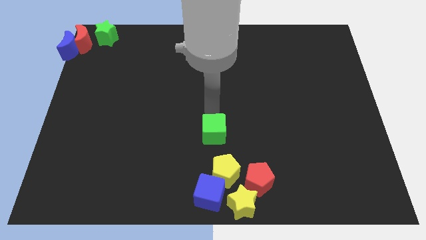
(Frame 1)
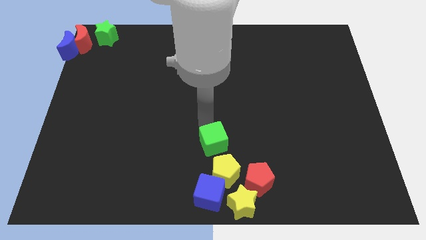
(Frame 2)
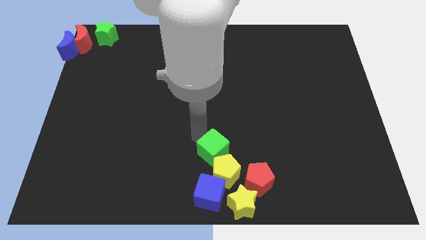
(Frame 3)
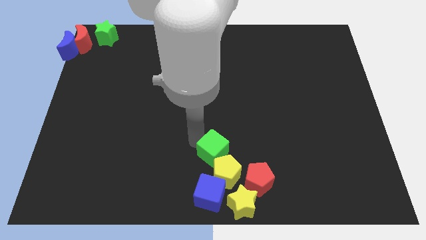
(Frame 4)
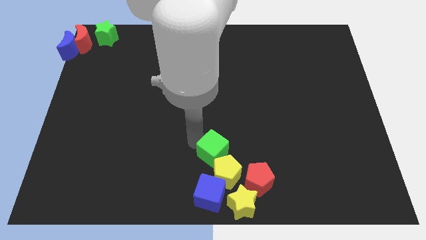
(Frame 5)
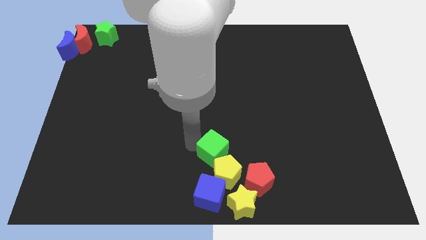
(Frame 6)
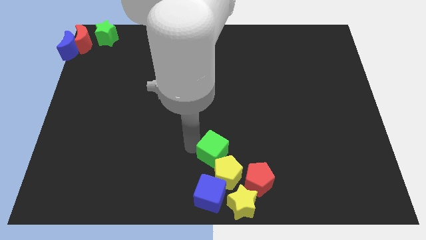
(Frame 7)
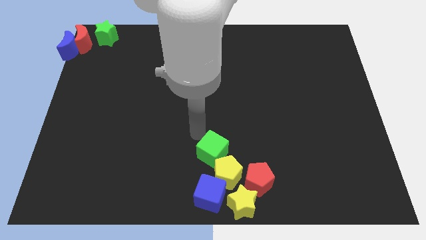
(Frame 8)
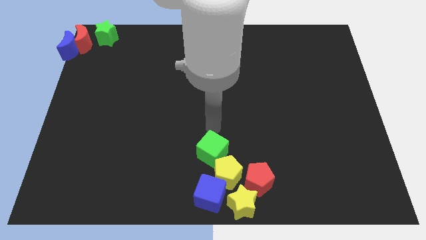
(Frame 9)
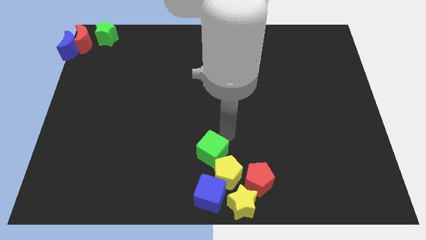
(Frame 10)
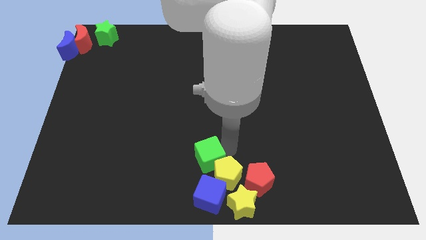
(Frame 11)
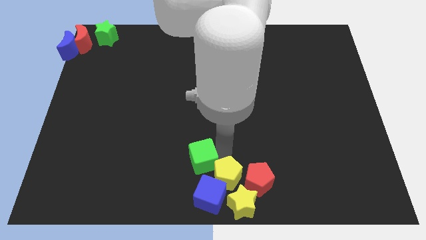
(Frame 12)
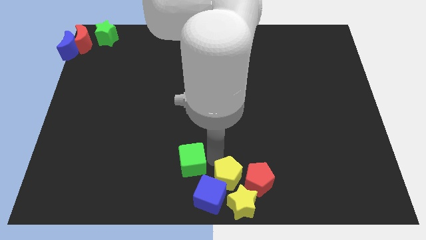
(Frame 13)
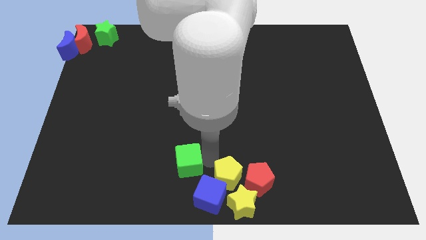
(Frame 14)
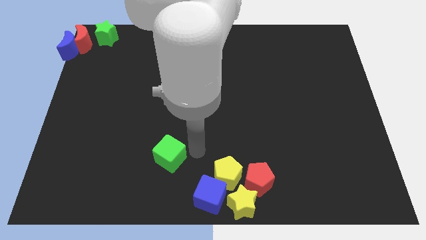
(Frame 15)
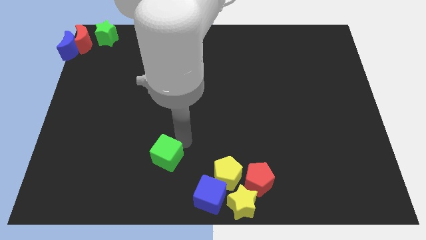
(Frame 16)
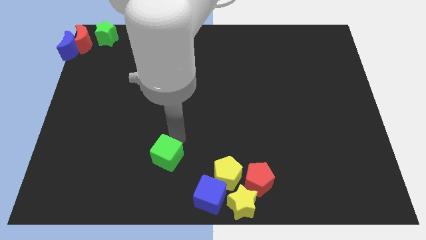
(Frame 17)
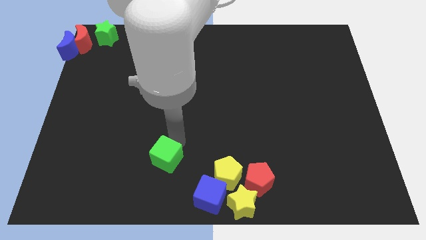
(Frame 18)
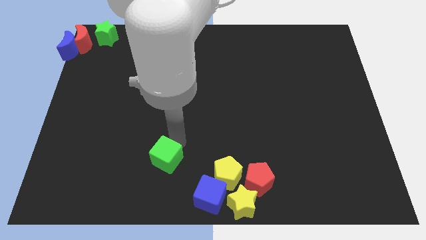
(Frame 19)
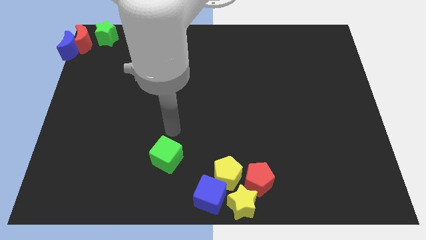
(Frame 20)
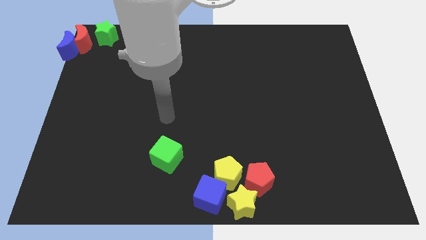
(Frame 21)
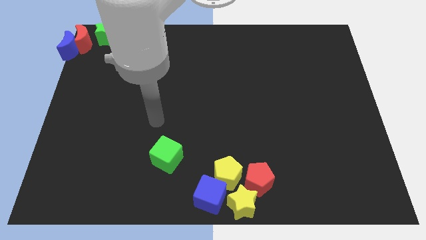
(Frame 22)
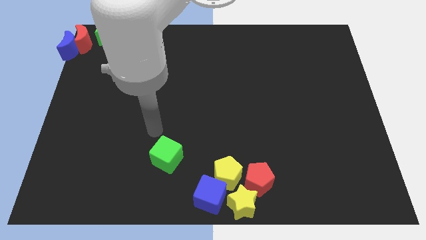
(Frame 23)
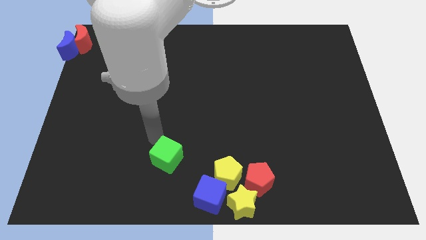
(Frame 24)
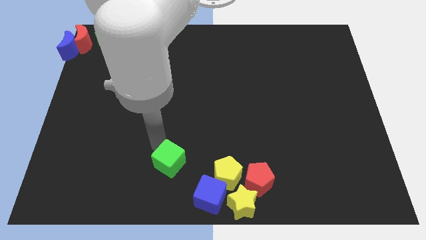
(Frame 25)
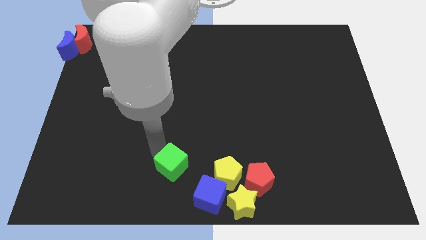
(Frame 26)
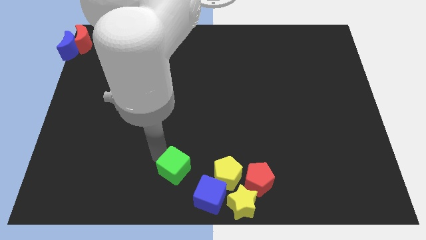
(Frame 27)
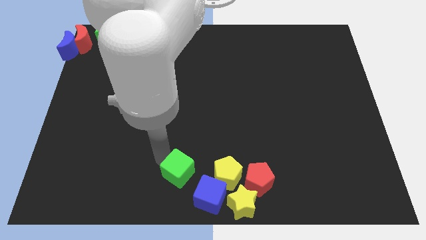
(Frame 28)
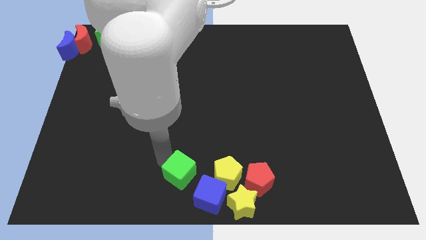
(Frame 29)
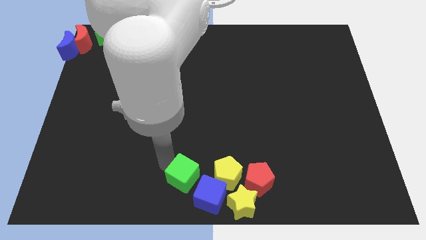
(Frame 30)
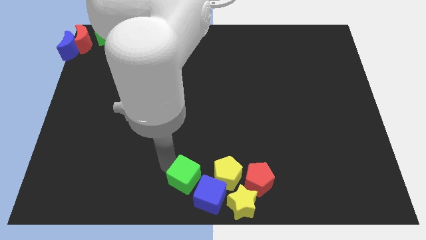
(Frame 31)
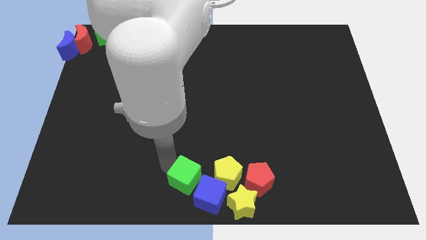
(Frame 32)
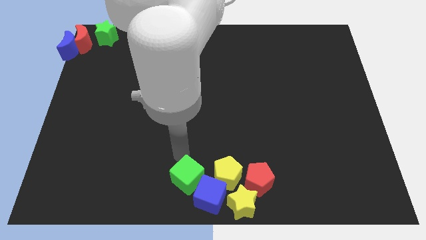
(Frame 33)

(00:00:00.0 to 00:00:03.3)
put the green star at the bottom center of the board

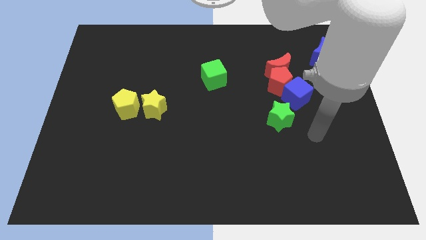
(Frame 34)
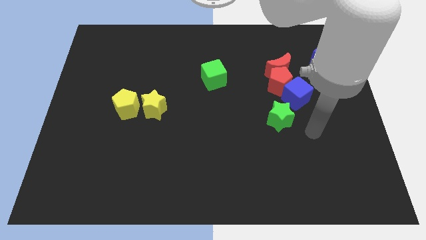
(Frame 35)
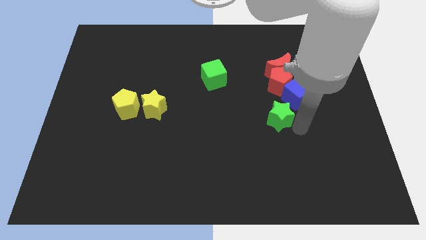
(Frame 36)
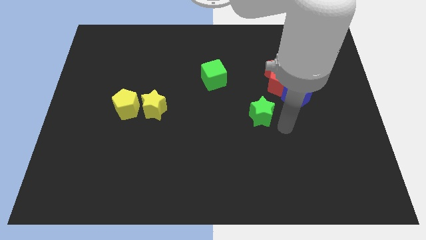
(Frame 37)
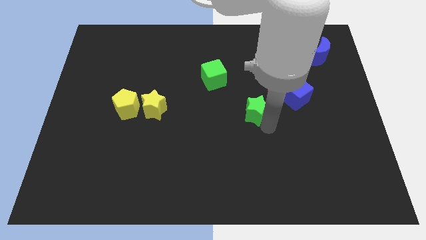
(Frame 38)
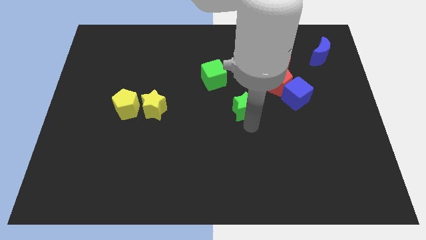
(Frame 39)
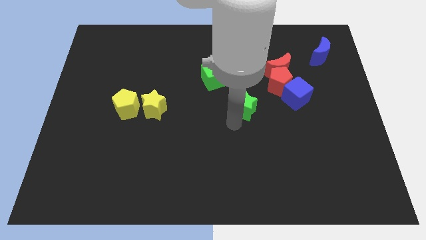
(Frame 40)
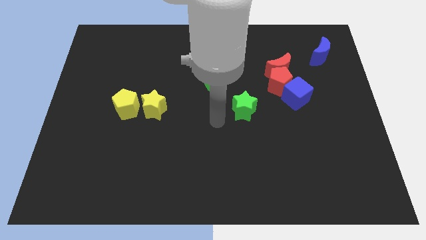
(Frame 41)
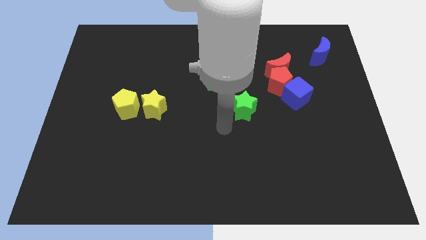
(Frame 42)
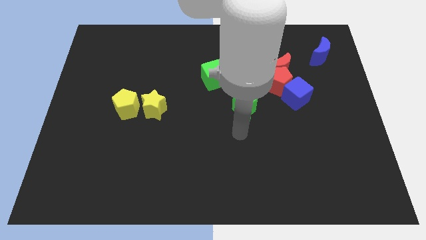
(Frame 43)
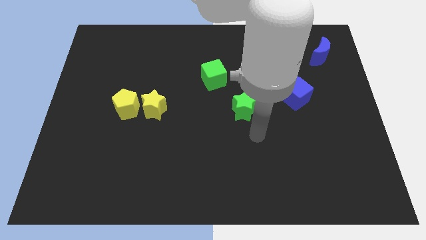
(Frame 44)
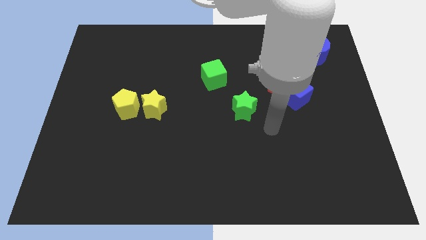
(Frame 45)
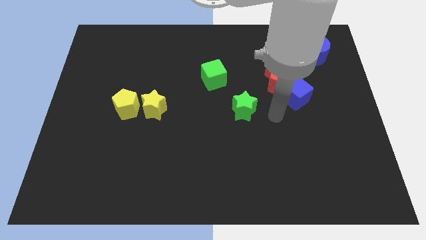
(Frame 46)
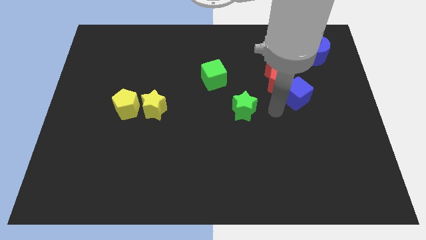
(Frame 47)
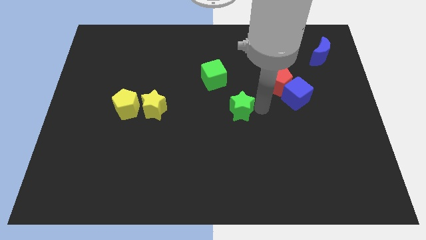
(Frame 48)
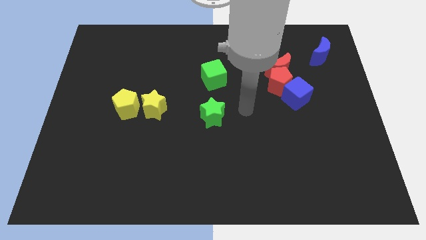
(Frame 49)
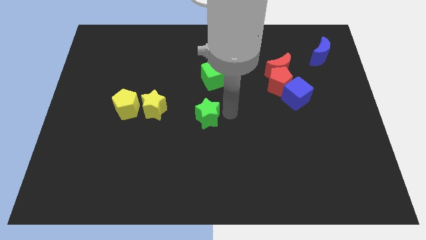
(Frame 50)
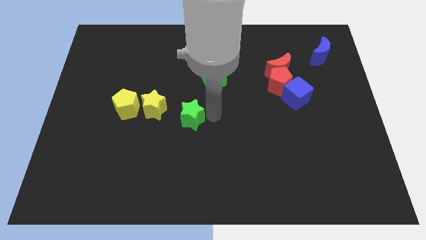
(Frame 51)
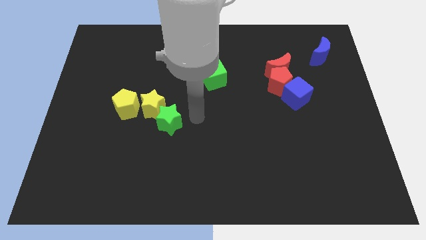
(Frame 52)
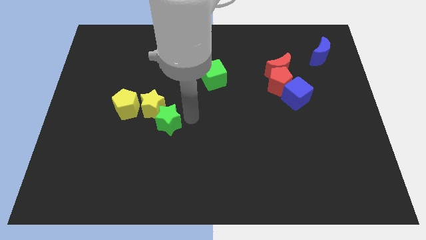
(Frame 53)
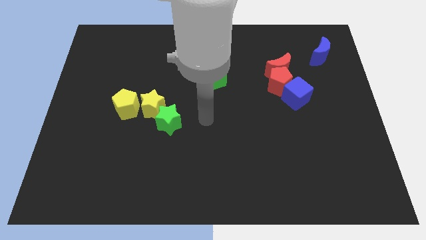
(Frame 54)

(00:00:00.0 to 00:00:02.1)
move the green star into yellow star

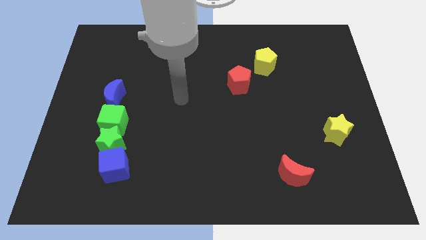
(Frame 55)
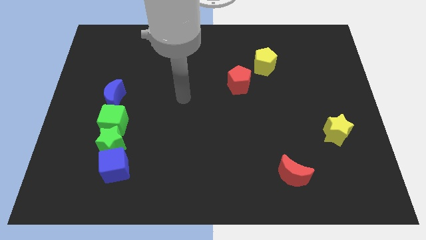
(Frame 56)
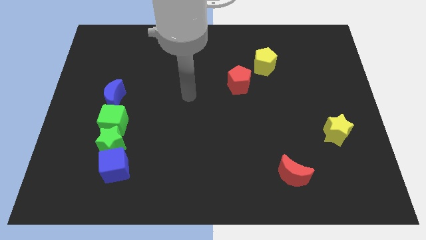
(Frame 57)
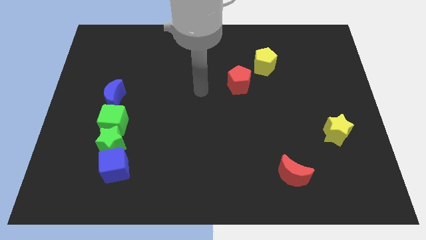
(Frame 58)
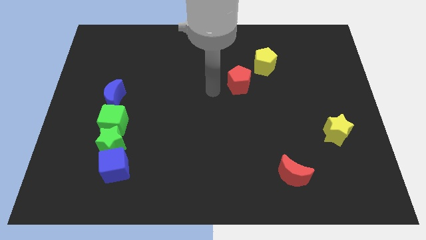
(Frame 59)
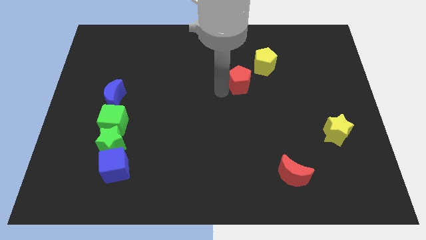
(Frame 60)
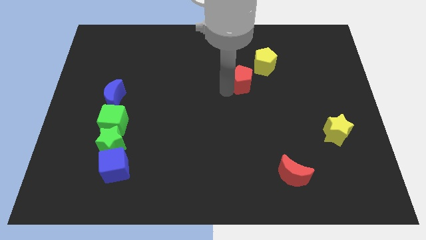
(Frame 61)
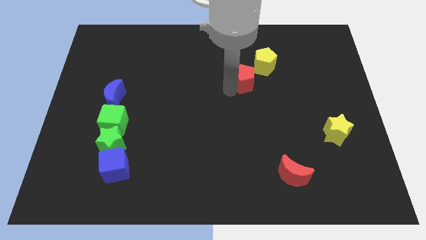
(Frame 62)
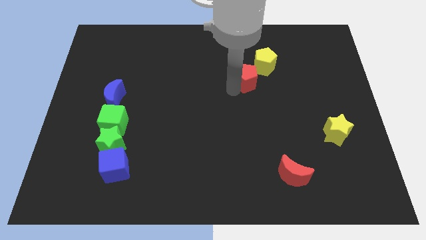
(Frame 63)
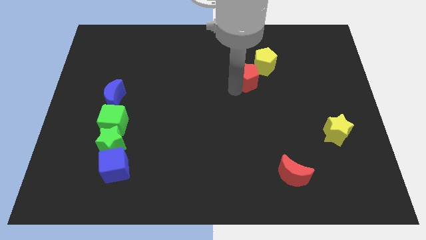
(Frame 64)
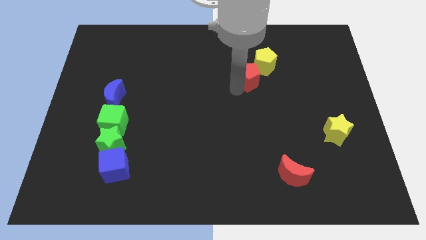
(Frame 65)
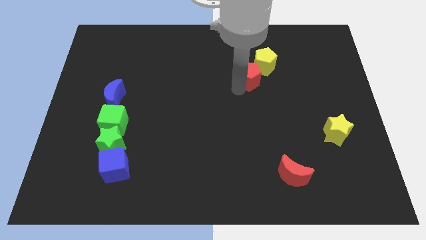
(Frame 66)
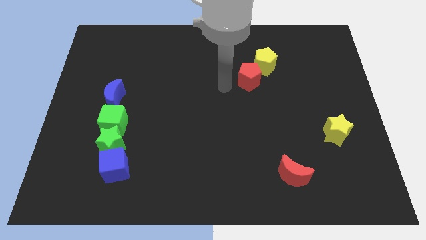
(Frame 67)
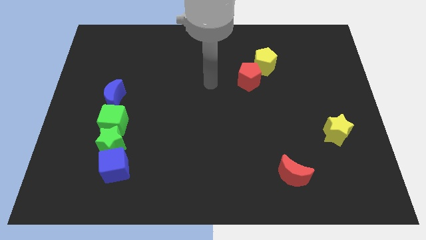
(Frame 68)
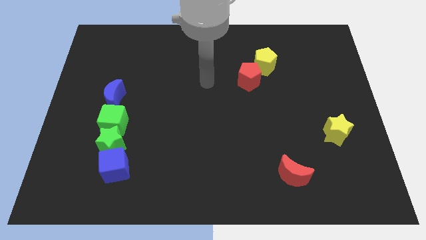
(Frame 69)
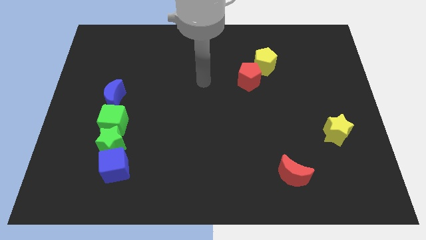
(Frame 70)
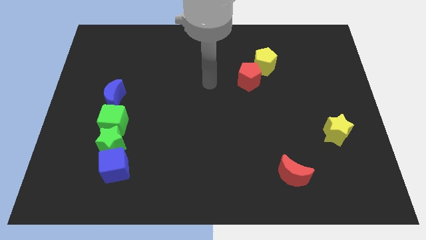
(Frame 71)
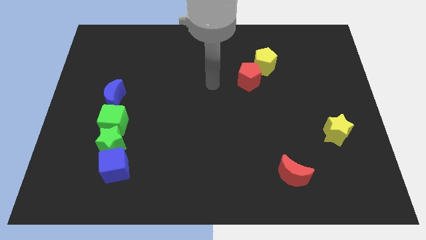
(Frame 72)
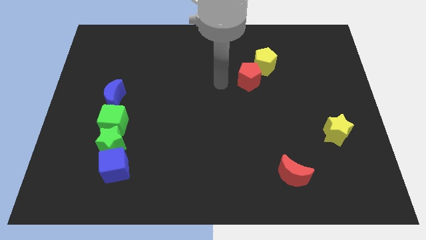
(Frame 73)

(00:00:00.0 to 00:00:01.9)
move the red pentagon to the bottom left of the yellow pentagon

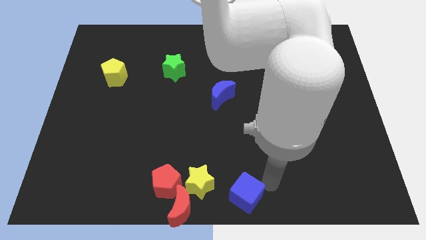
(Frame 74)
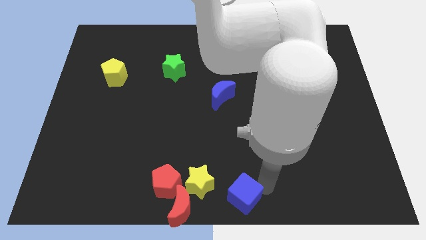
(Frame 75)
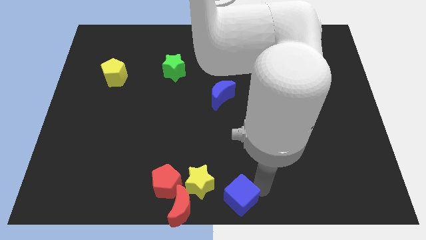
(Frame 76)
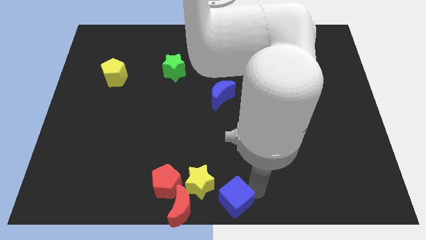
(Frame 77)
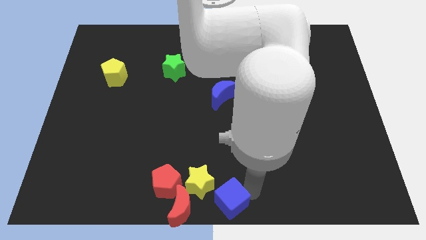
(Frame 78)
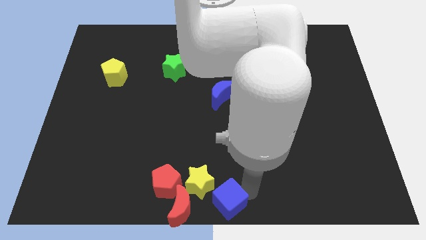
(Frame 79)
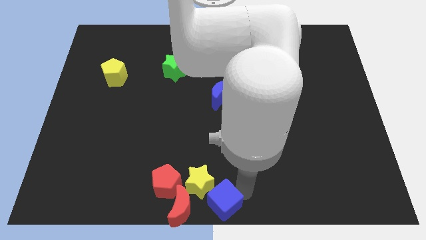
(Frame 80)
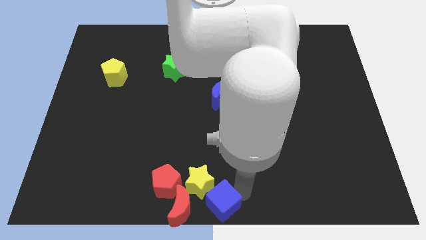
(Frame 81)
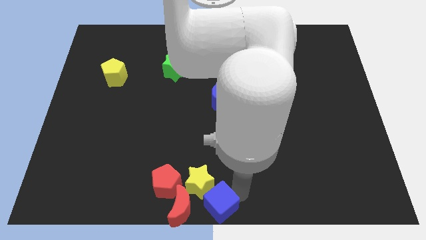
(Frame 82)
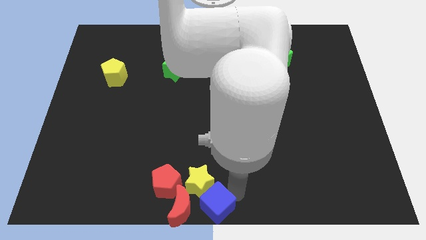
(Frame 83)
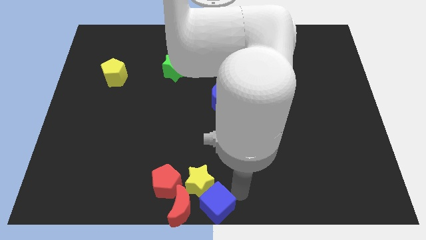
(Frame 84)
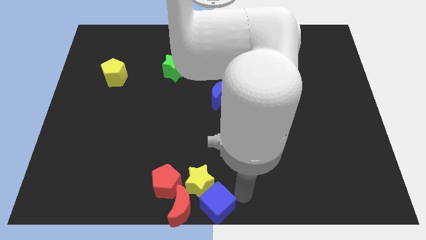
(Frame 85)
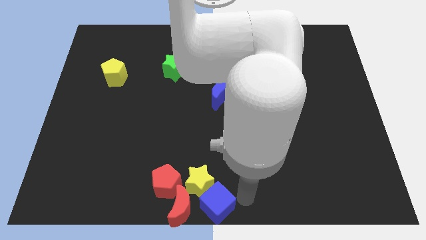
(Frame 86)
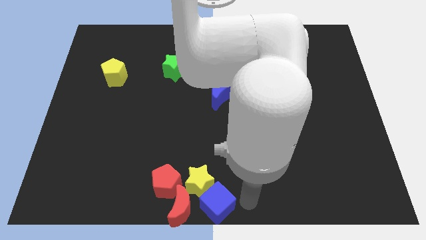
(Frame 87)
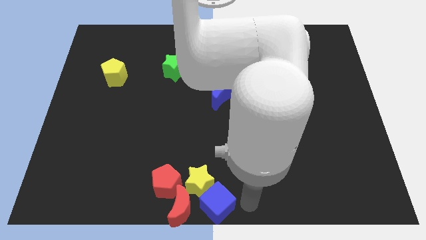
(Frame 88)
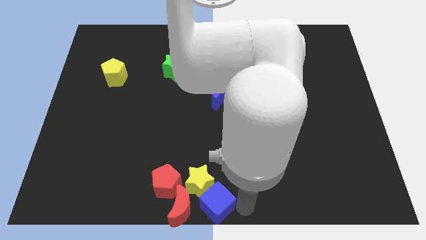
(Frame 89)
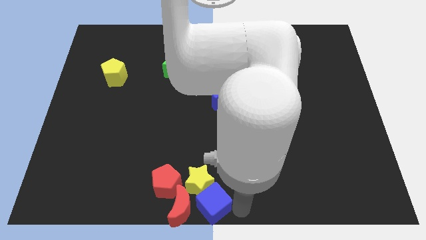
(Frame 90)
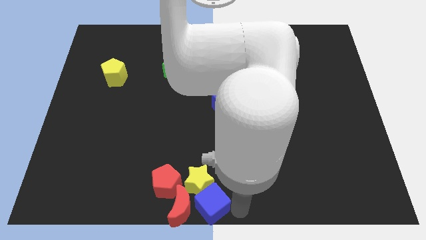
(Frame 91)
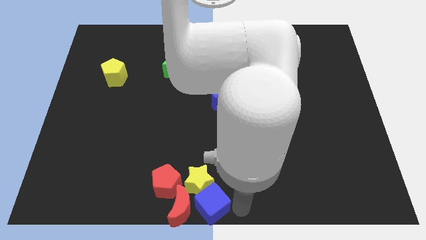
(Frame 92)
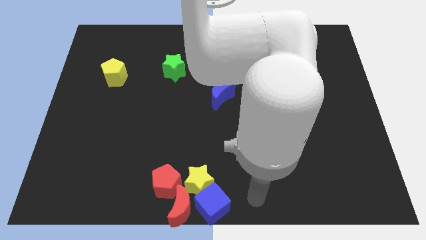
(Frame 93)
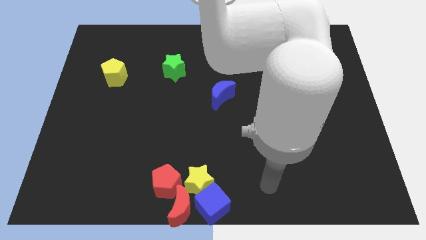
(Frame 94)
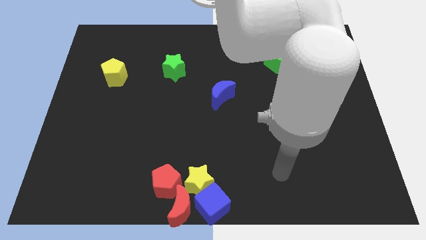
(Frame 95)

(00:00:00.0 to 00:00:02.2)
move the blue cube towards the bottom of the yellow star
